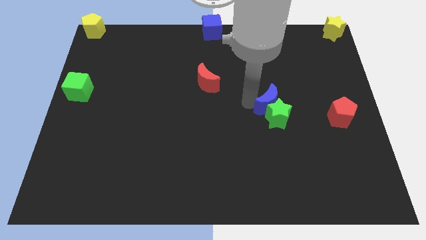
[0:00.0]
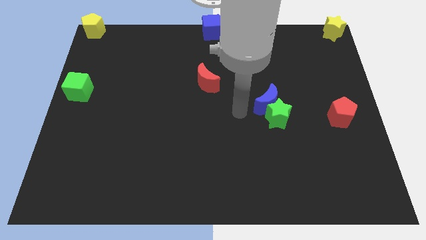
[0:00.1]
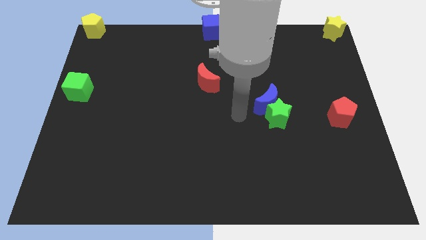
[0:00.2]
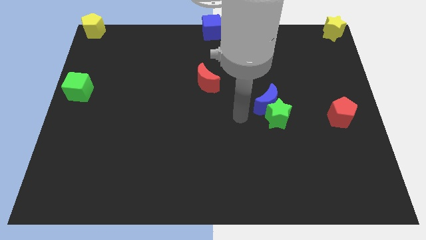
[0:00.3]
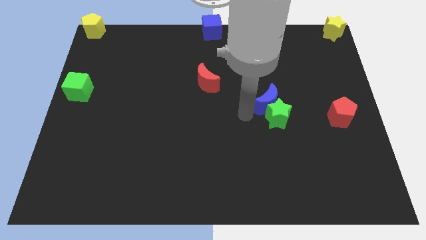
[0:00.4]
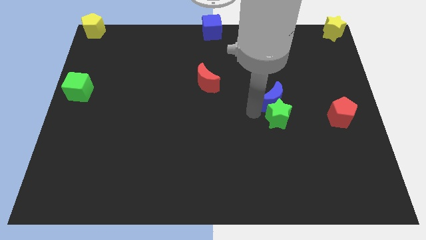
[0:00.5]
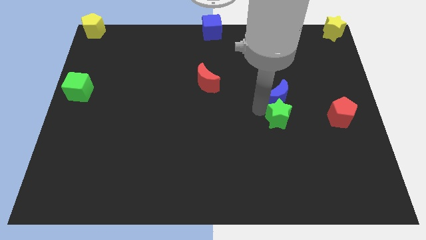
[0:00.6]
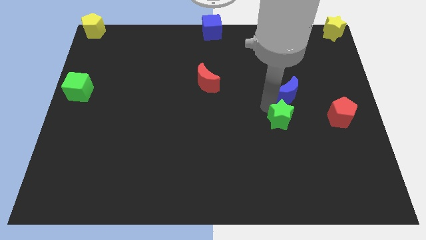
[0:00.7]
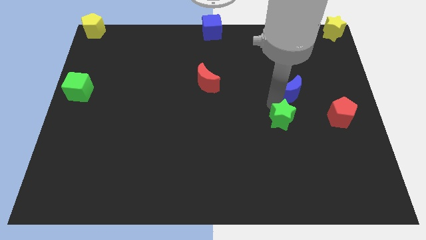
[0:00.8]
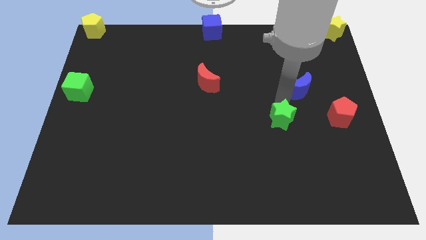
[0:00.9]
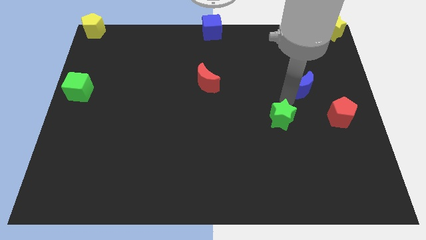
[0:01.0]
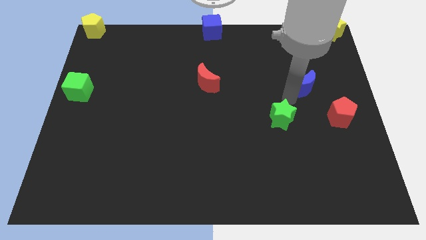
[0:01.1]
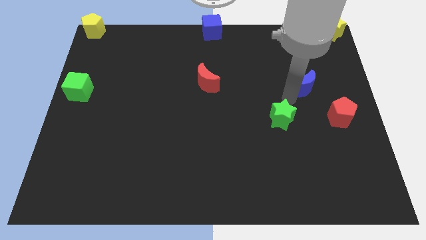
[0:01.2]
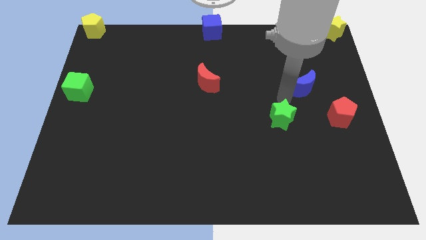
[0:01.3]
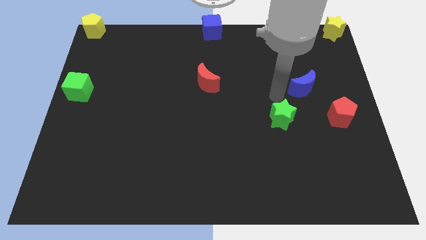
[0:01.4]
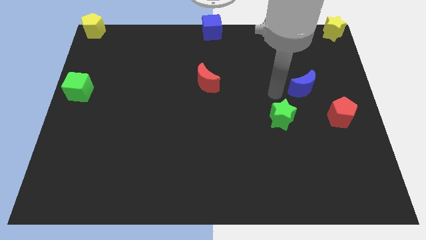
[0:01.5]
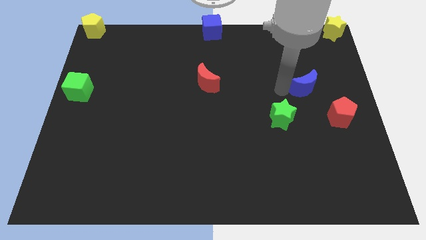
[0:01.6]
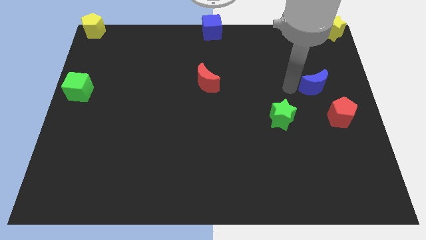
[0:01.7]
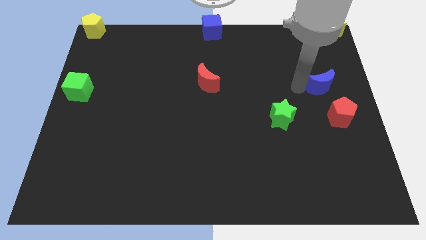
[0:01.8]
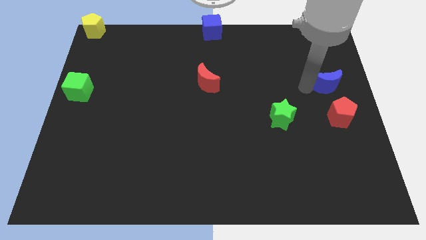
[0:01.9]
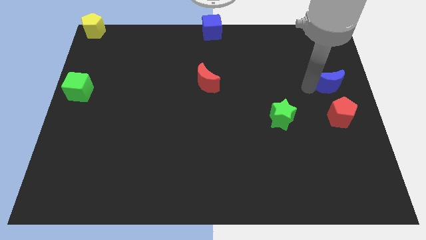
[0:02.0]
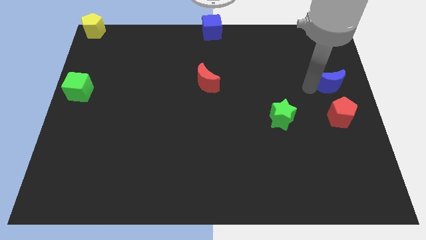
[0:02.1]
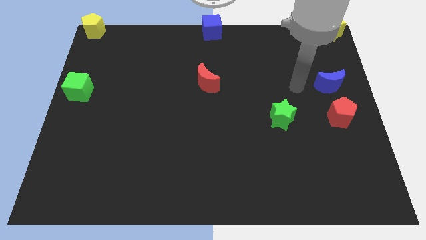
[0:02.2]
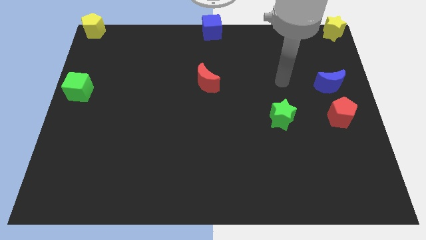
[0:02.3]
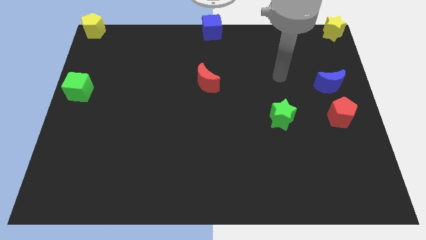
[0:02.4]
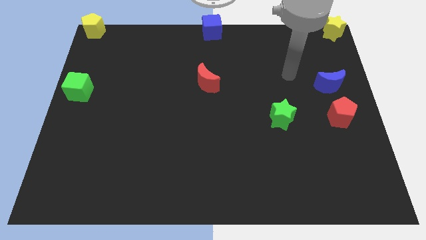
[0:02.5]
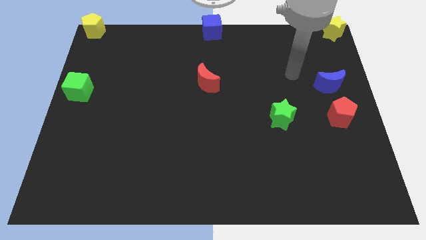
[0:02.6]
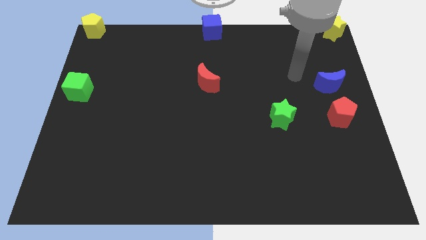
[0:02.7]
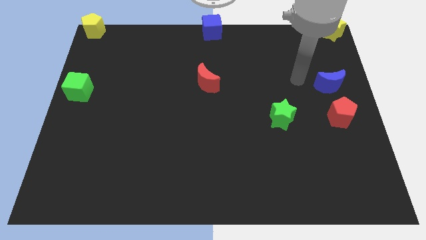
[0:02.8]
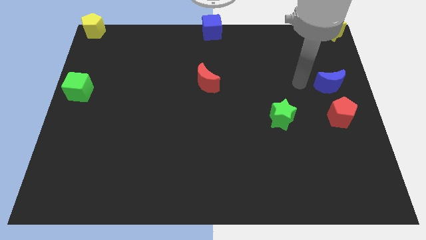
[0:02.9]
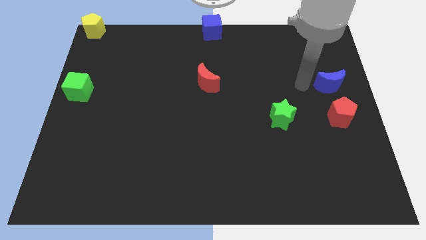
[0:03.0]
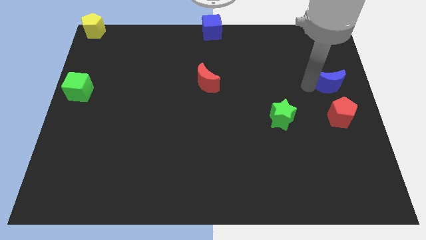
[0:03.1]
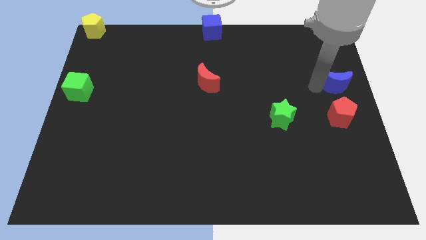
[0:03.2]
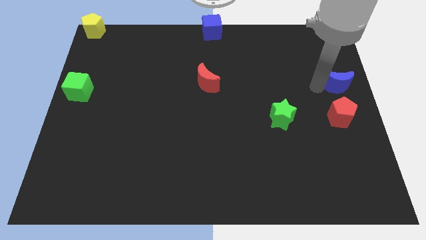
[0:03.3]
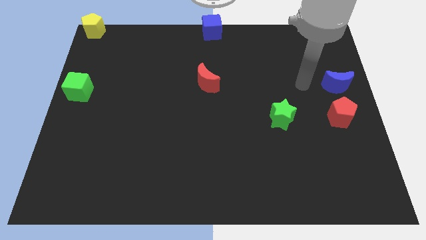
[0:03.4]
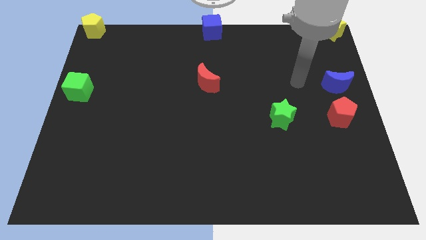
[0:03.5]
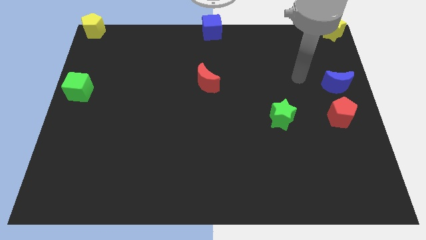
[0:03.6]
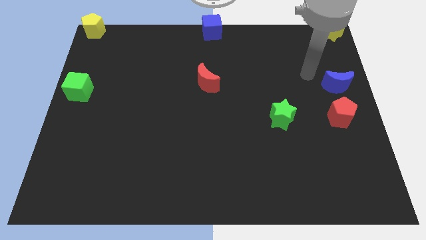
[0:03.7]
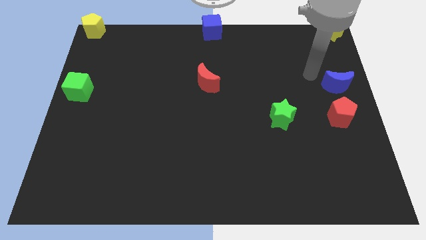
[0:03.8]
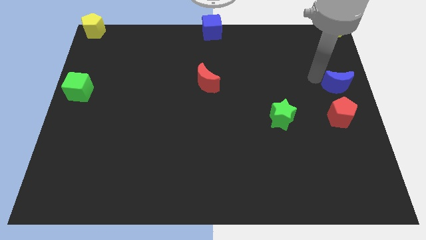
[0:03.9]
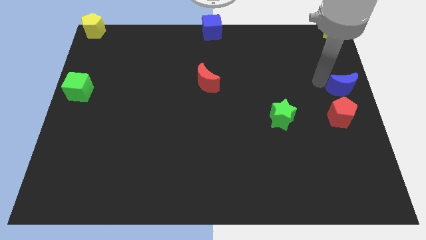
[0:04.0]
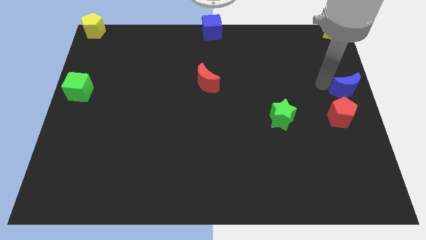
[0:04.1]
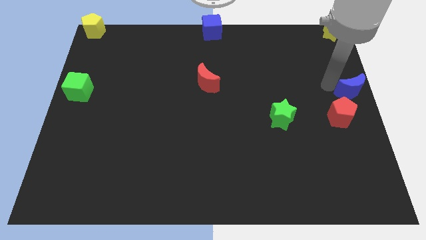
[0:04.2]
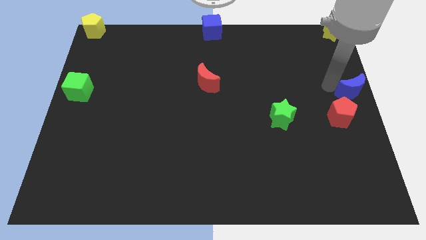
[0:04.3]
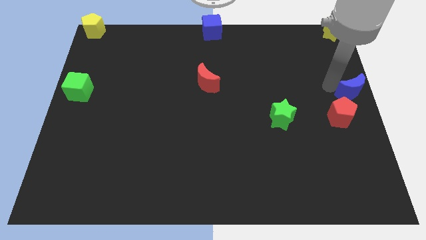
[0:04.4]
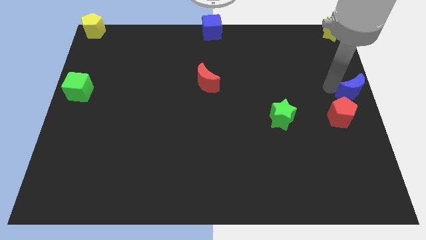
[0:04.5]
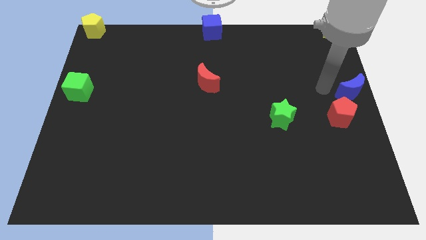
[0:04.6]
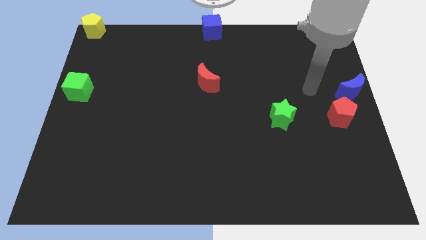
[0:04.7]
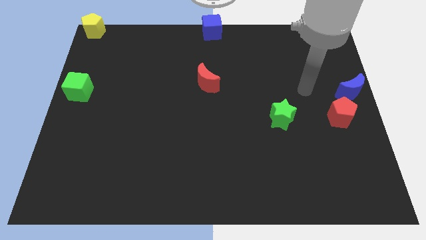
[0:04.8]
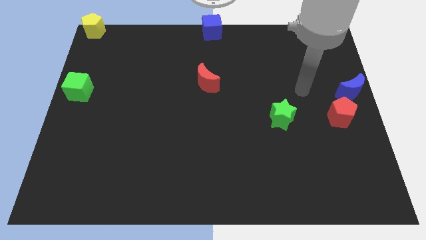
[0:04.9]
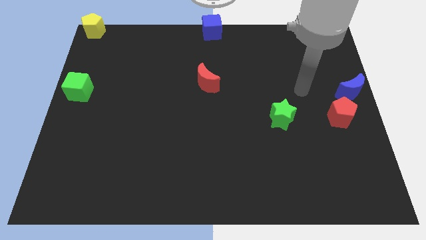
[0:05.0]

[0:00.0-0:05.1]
place the blue moon to the middle right of the board

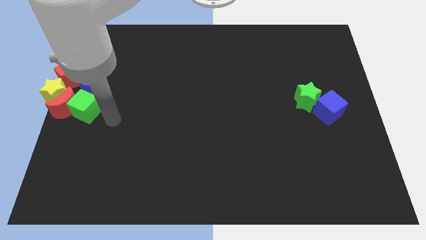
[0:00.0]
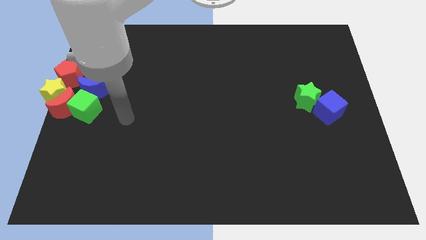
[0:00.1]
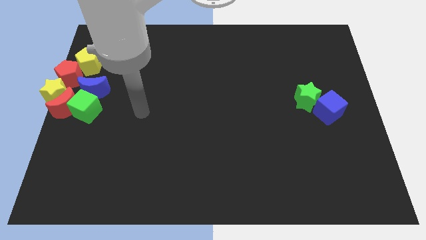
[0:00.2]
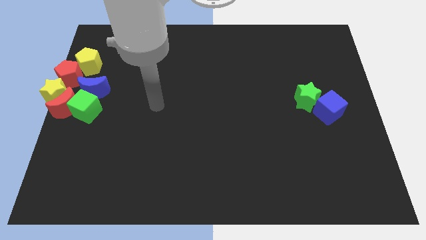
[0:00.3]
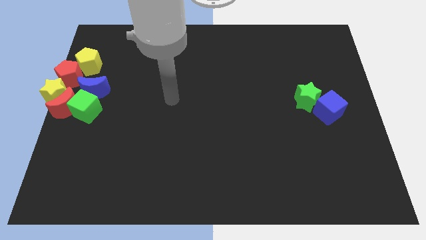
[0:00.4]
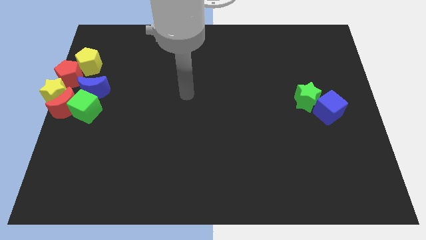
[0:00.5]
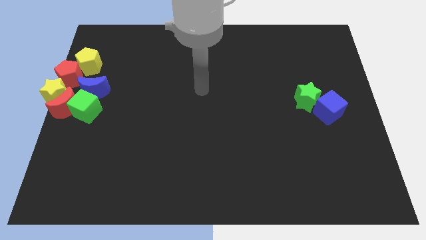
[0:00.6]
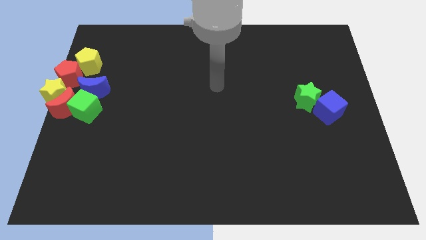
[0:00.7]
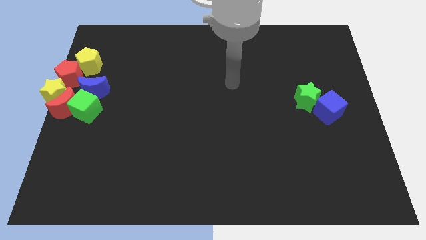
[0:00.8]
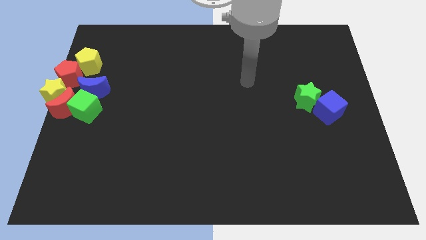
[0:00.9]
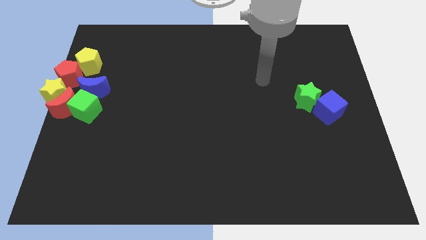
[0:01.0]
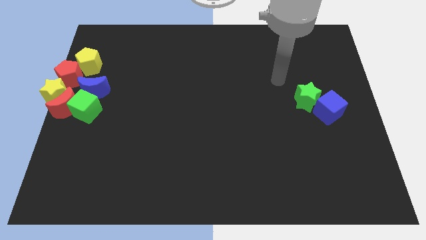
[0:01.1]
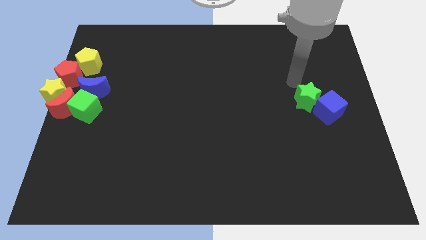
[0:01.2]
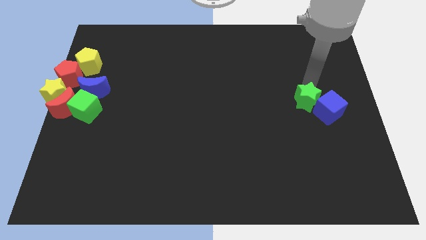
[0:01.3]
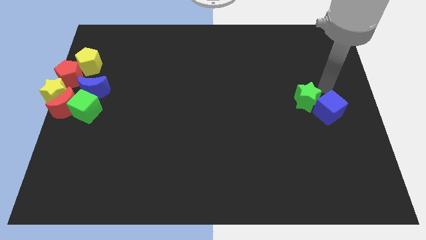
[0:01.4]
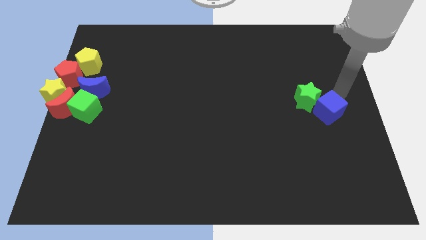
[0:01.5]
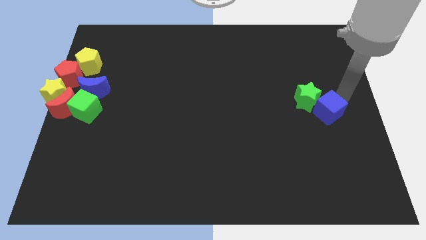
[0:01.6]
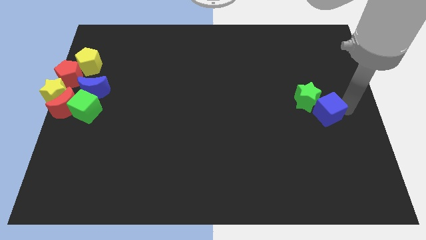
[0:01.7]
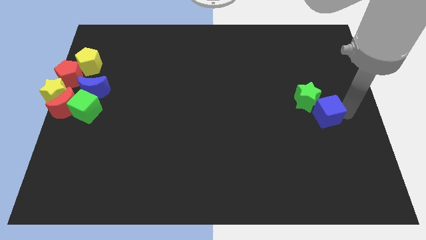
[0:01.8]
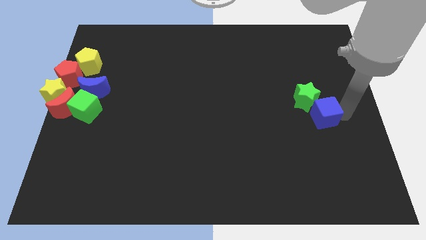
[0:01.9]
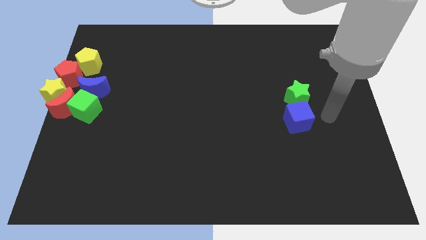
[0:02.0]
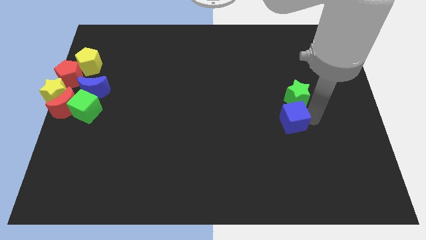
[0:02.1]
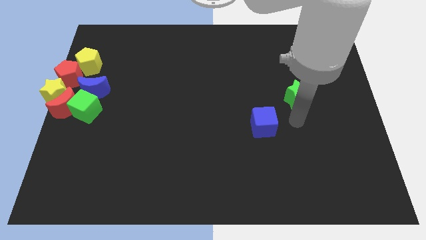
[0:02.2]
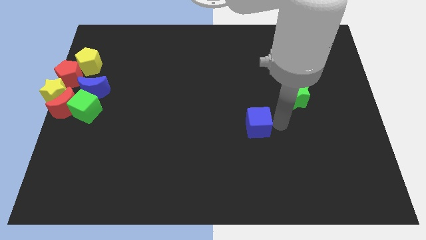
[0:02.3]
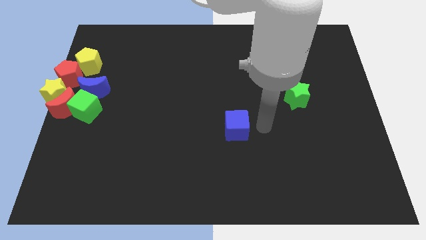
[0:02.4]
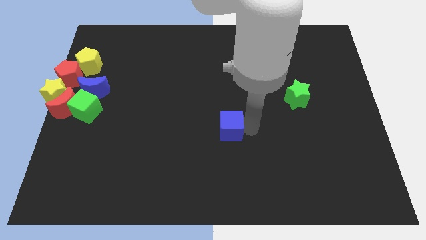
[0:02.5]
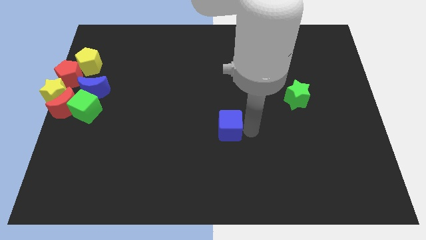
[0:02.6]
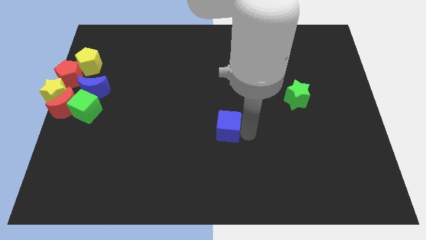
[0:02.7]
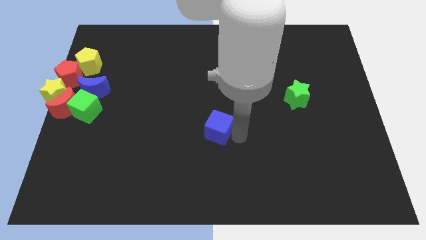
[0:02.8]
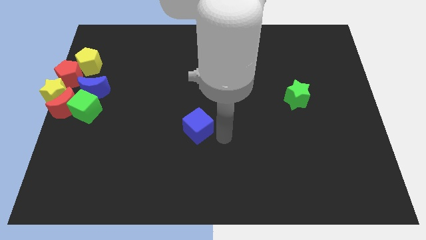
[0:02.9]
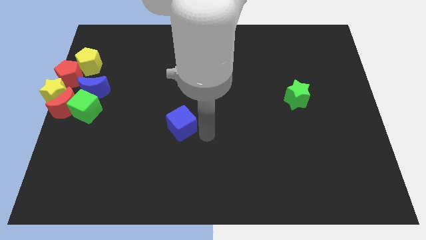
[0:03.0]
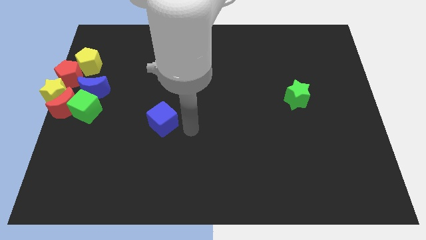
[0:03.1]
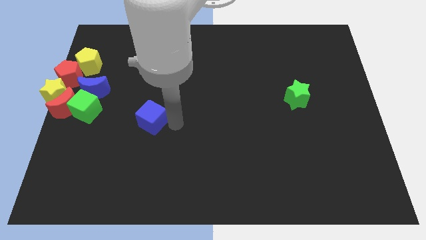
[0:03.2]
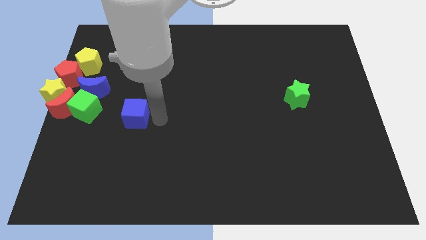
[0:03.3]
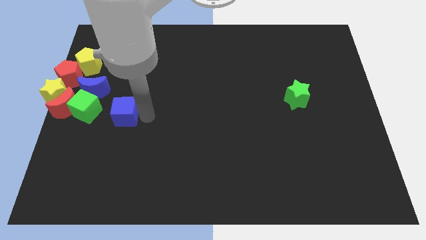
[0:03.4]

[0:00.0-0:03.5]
separate the blue cube from the green star

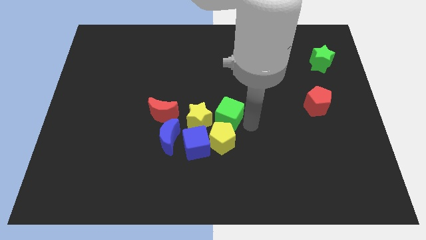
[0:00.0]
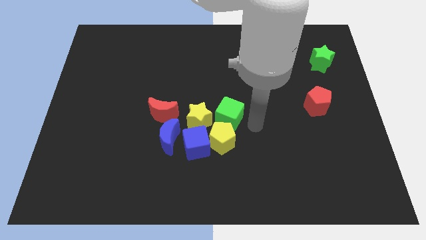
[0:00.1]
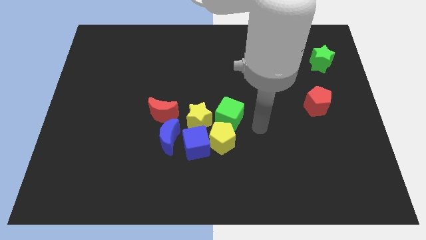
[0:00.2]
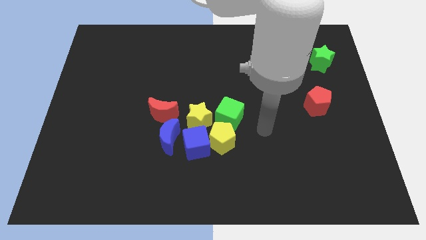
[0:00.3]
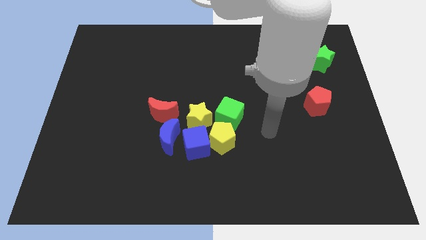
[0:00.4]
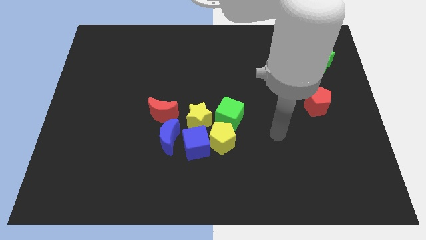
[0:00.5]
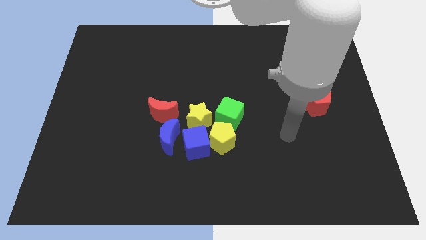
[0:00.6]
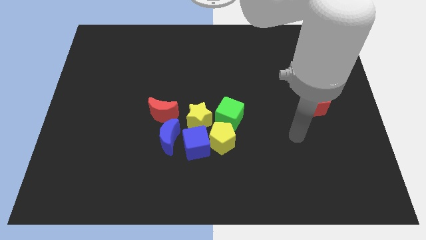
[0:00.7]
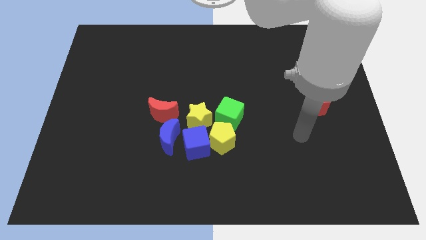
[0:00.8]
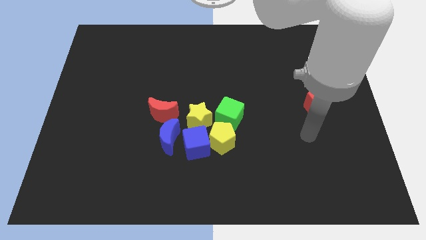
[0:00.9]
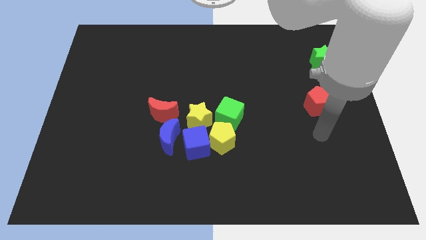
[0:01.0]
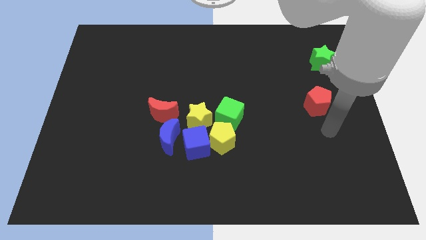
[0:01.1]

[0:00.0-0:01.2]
place your arm to the bottom of red pentagon
